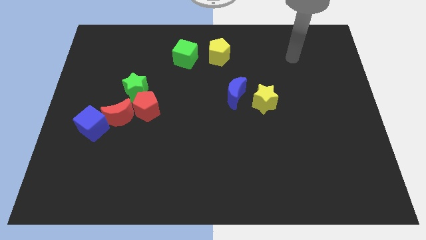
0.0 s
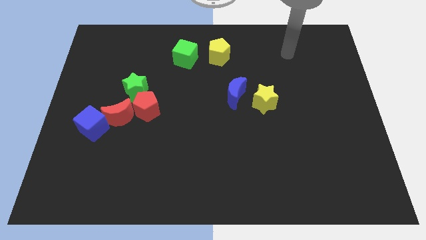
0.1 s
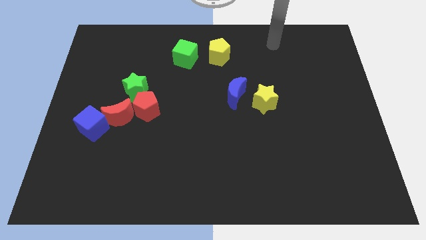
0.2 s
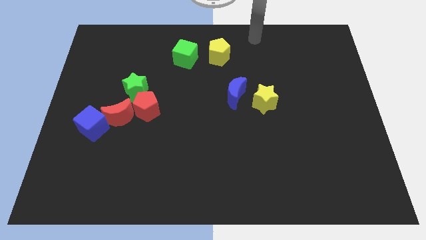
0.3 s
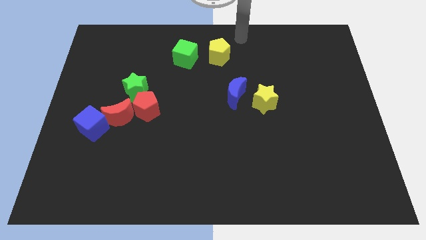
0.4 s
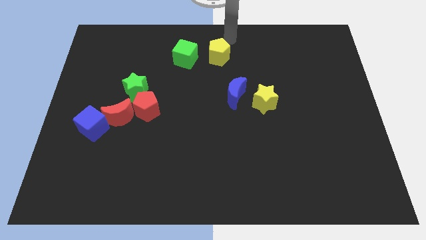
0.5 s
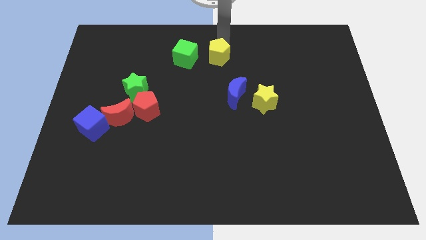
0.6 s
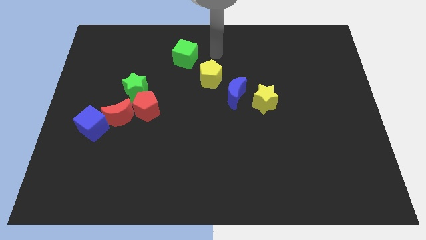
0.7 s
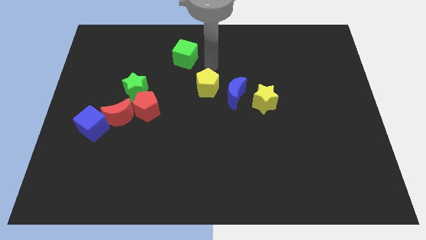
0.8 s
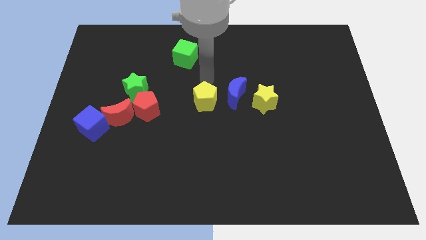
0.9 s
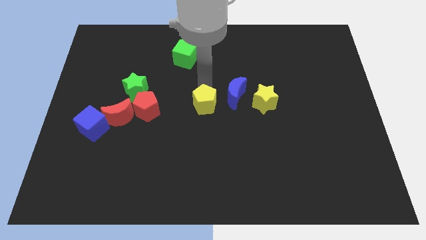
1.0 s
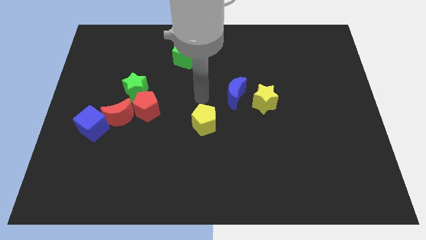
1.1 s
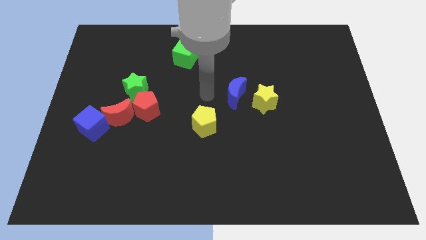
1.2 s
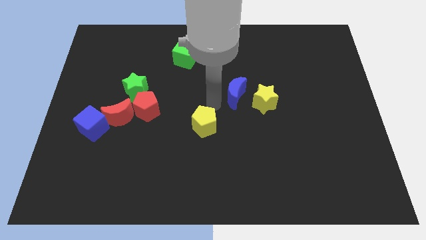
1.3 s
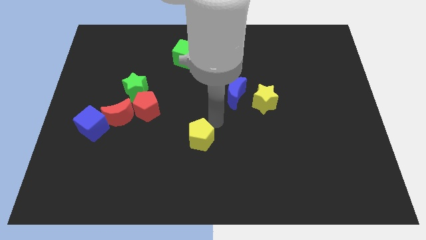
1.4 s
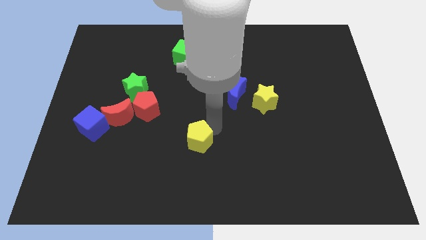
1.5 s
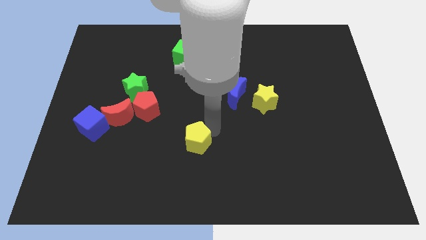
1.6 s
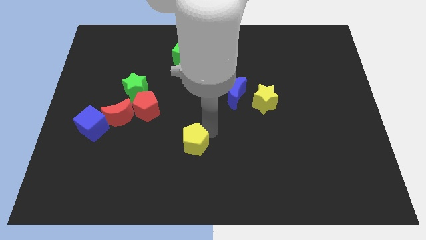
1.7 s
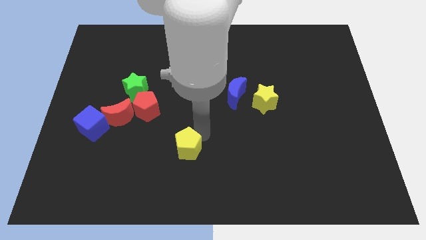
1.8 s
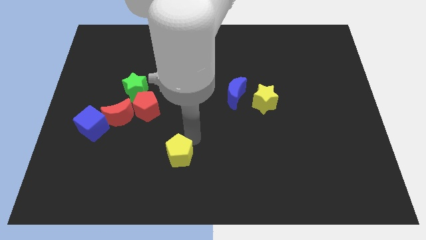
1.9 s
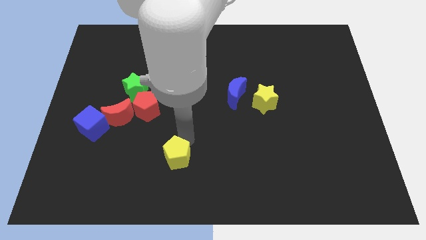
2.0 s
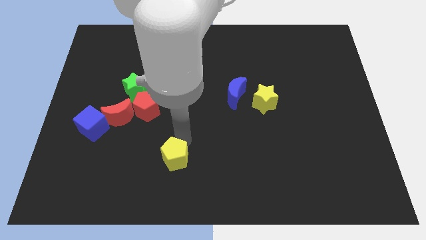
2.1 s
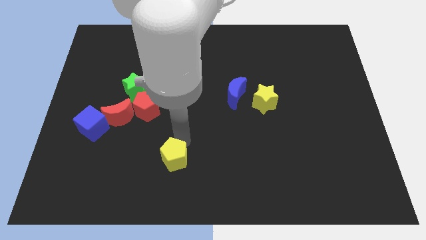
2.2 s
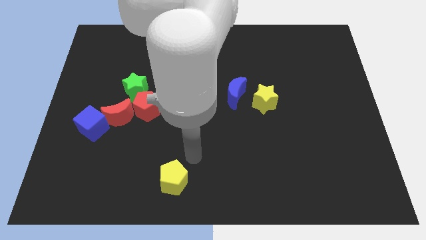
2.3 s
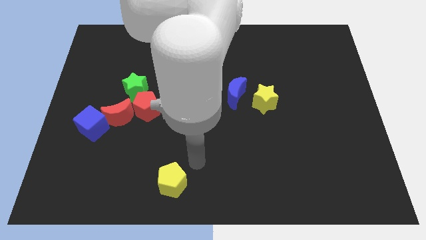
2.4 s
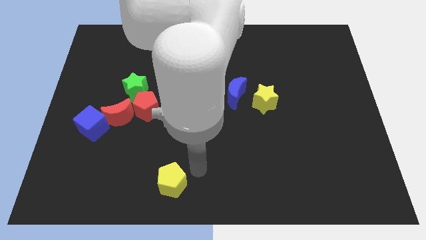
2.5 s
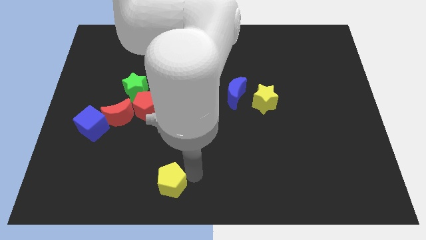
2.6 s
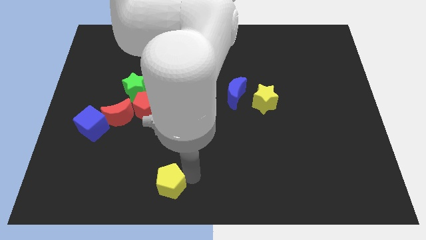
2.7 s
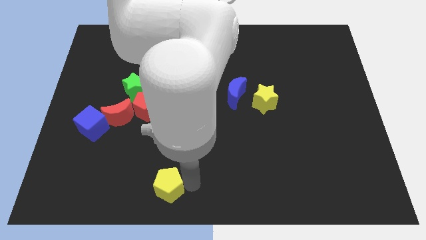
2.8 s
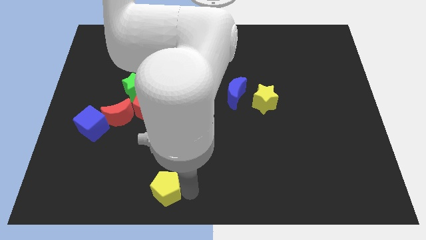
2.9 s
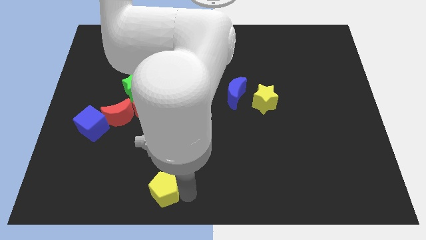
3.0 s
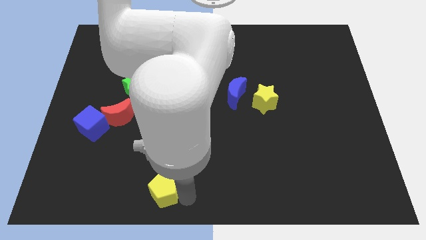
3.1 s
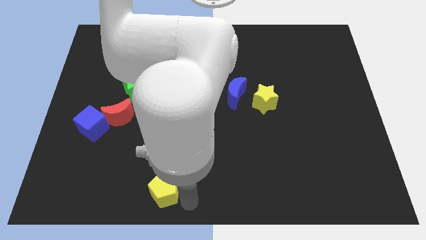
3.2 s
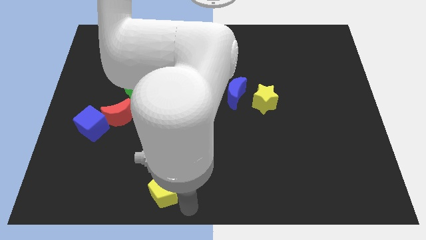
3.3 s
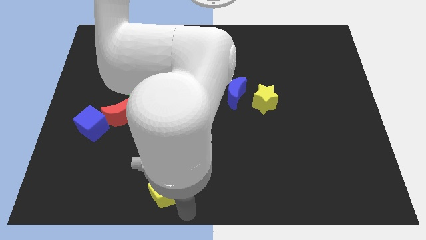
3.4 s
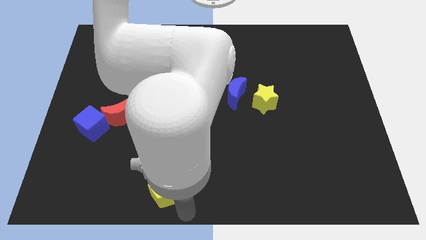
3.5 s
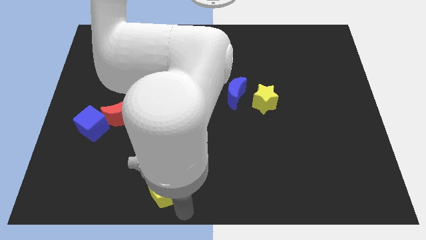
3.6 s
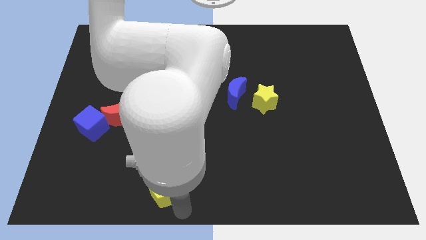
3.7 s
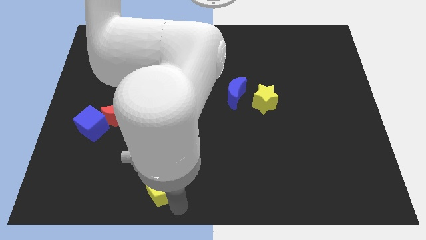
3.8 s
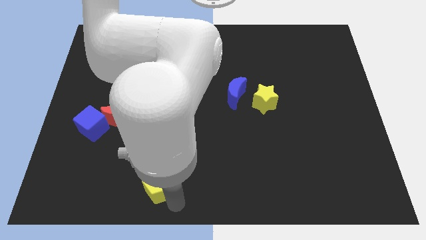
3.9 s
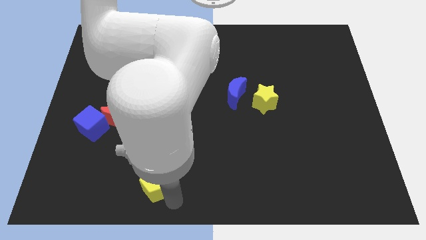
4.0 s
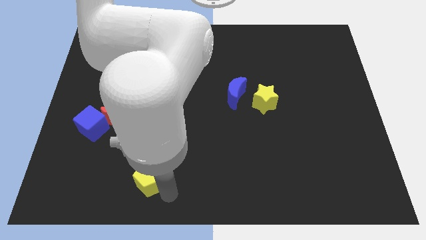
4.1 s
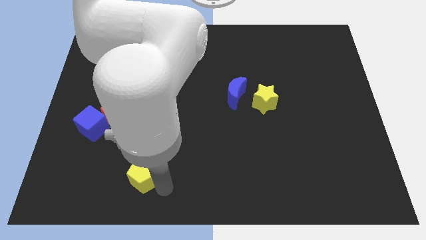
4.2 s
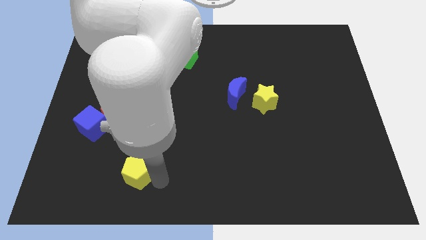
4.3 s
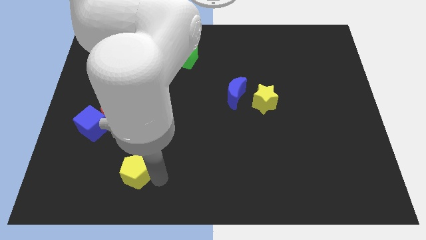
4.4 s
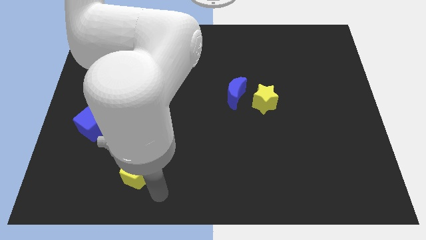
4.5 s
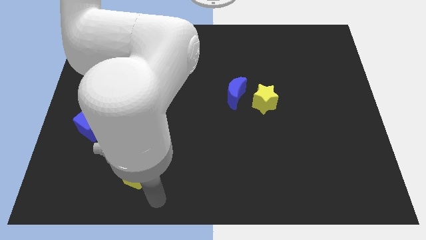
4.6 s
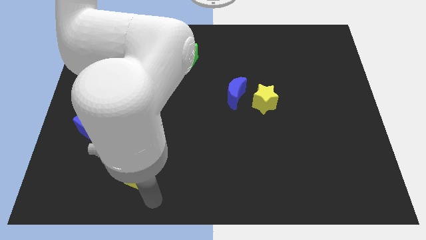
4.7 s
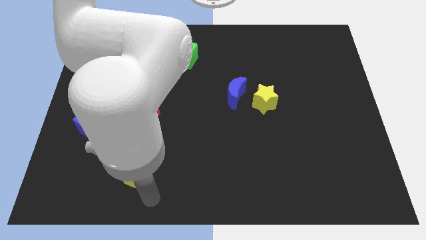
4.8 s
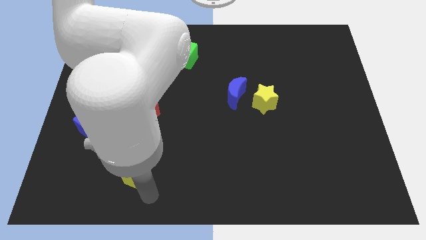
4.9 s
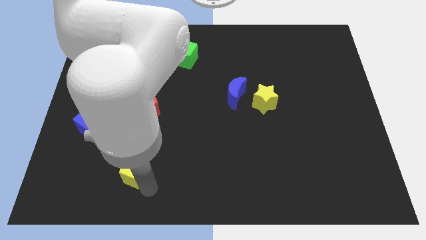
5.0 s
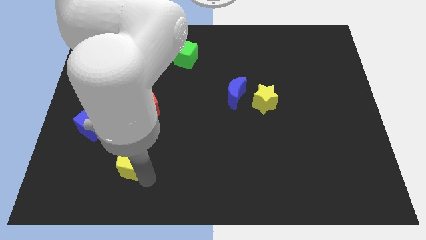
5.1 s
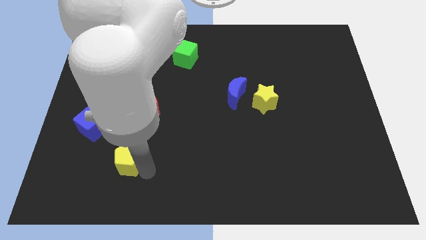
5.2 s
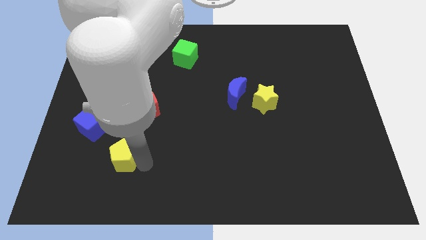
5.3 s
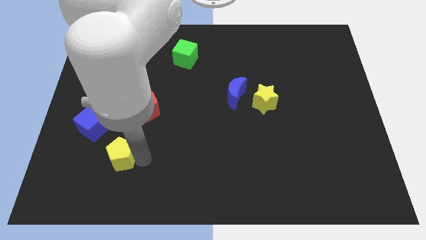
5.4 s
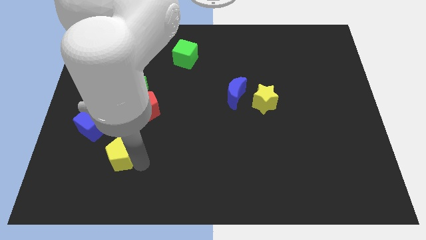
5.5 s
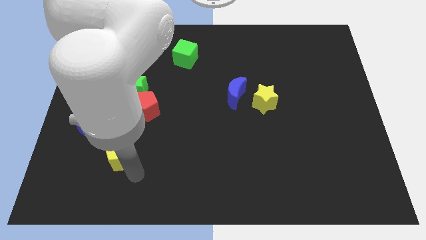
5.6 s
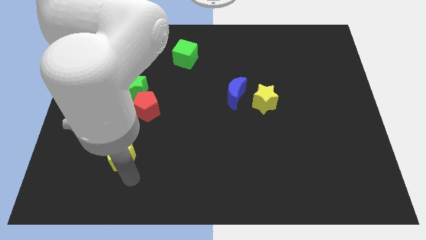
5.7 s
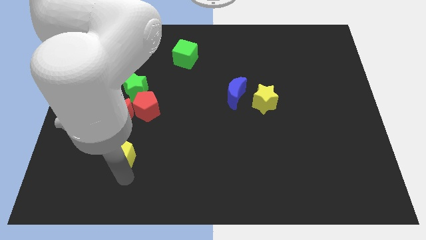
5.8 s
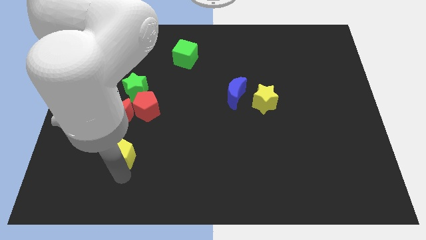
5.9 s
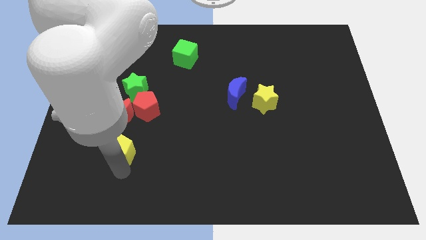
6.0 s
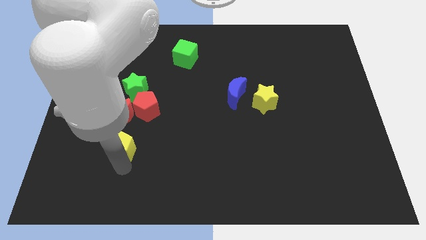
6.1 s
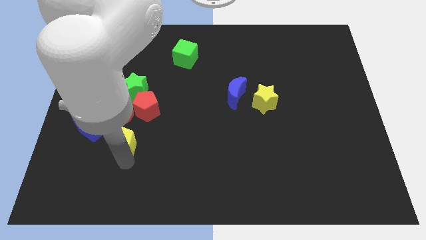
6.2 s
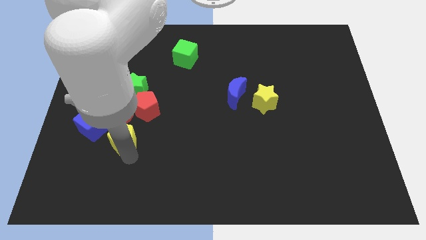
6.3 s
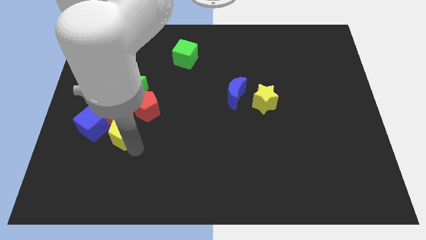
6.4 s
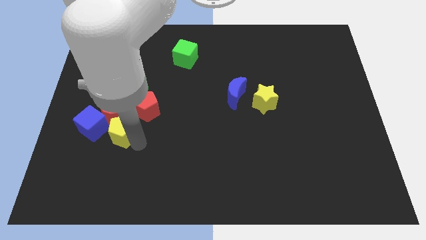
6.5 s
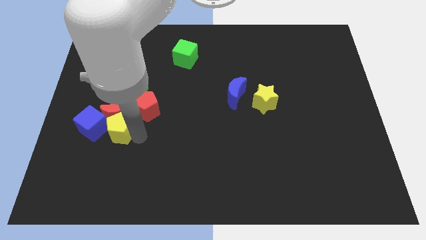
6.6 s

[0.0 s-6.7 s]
move the yellow pentagon towards the red moon

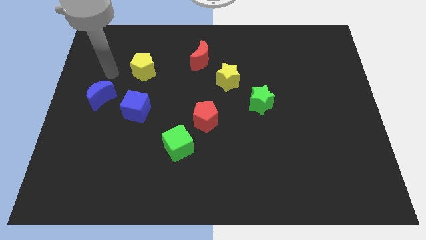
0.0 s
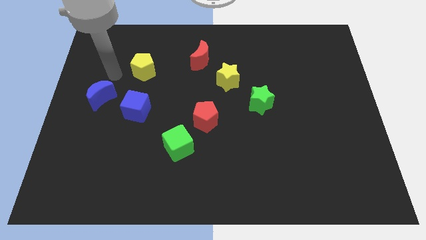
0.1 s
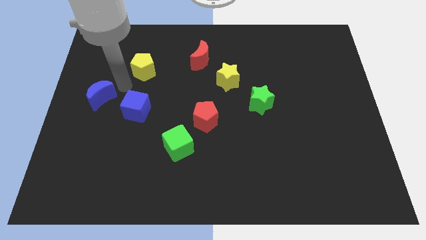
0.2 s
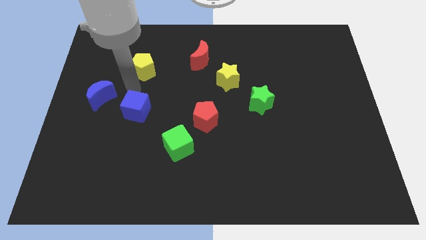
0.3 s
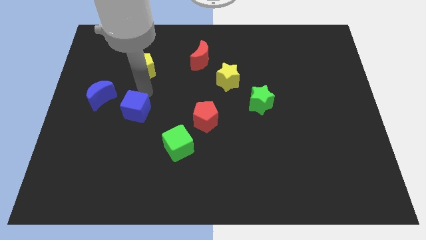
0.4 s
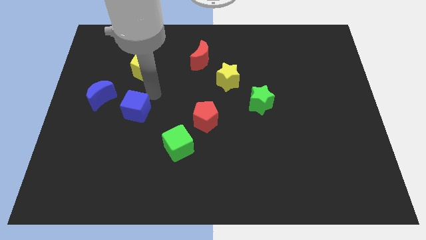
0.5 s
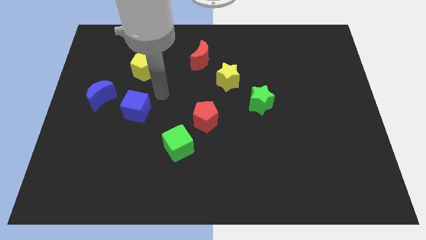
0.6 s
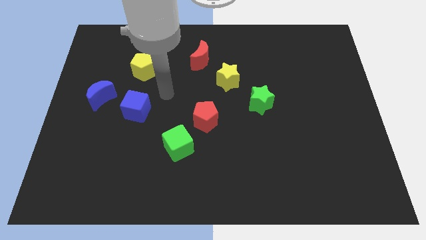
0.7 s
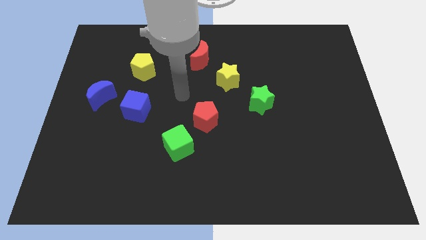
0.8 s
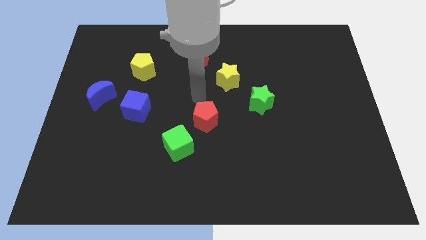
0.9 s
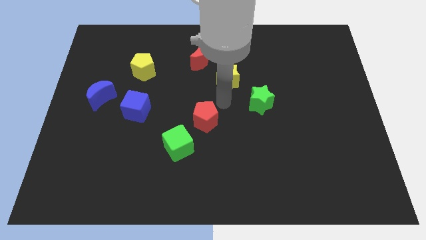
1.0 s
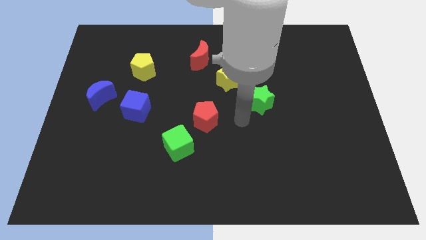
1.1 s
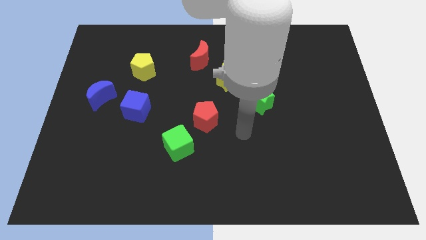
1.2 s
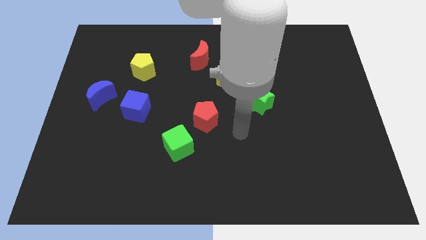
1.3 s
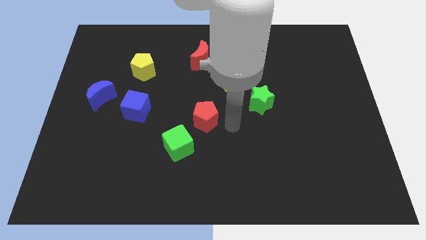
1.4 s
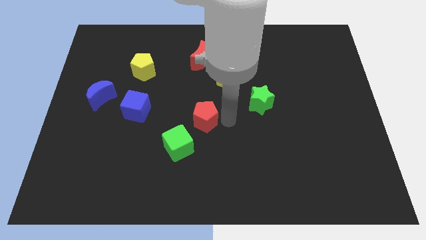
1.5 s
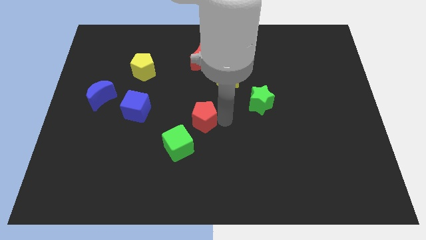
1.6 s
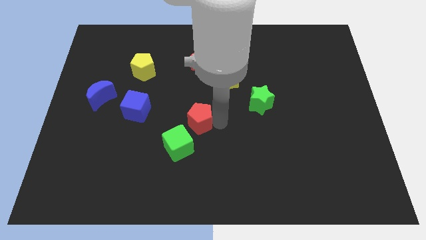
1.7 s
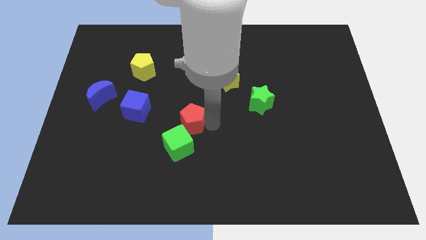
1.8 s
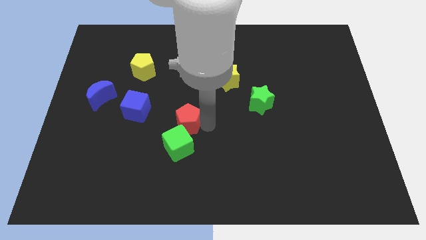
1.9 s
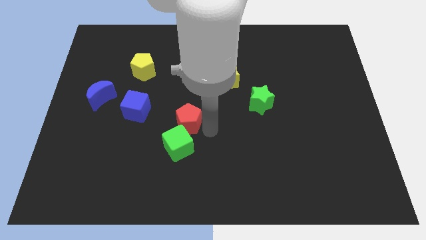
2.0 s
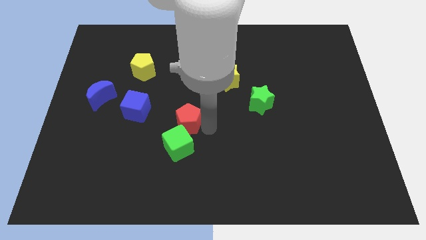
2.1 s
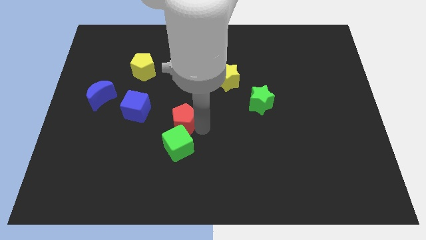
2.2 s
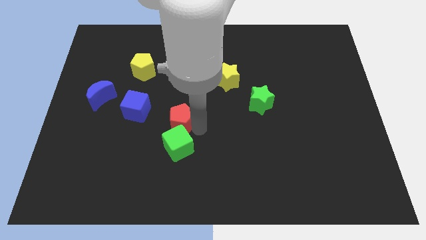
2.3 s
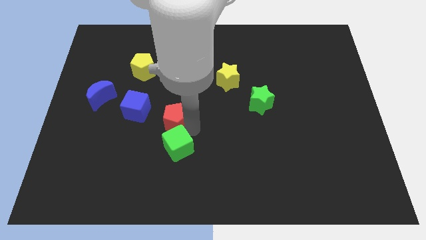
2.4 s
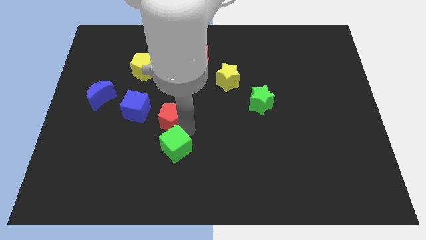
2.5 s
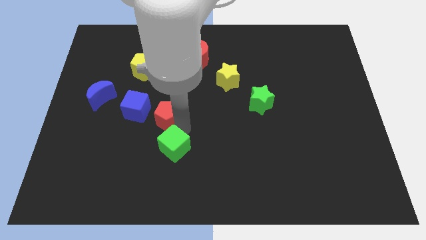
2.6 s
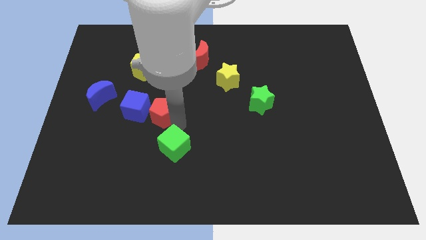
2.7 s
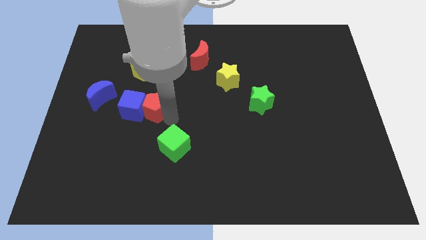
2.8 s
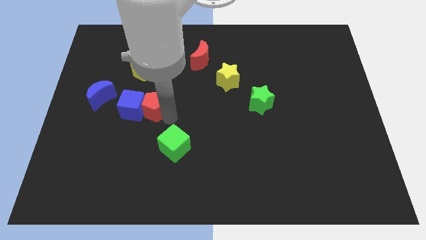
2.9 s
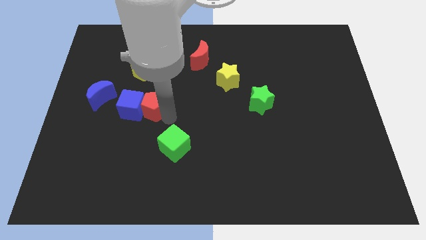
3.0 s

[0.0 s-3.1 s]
push the red pentagon to the blue cube
